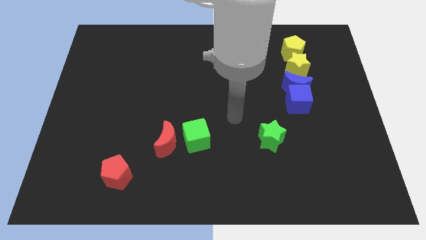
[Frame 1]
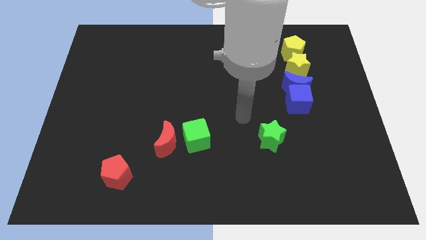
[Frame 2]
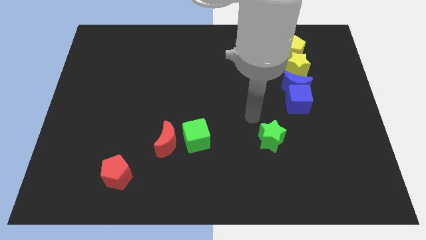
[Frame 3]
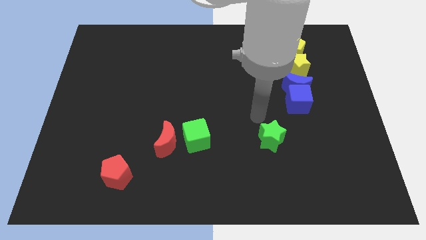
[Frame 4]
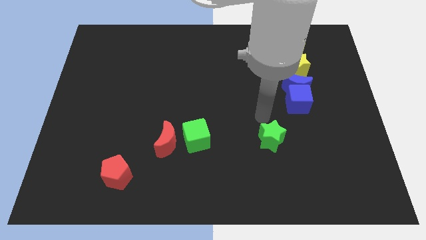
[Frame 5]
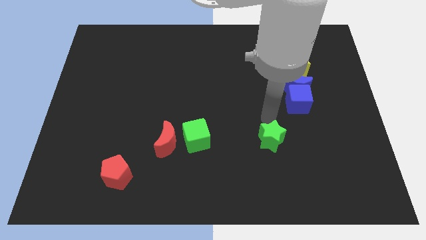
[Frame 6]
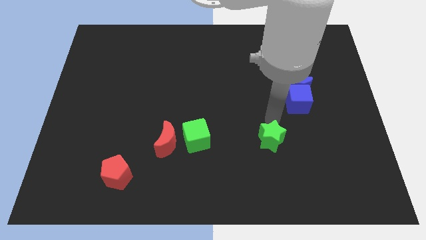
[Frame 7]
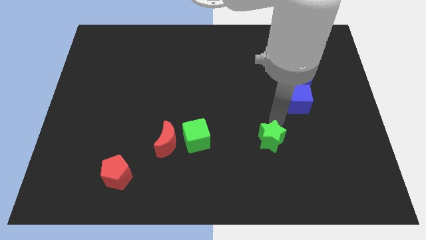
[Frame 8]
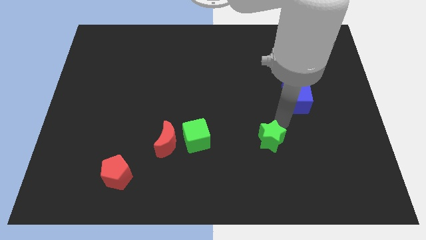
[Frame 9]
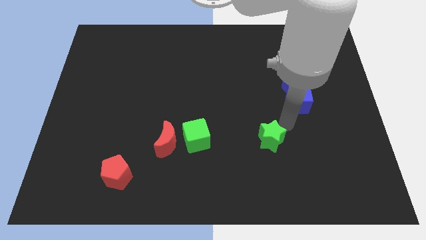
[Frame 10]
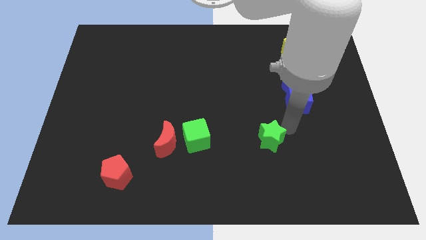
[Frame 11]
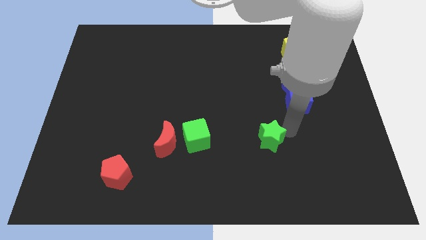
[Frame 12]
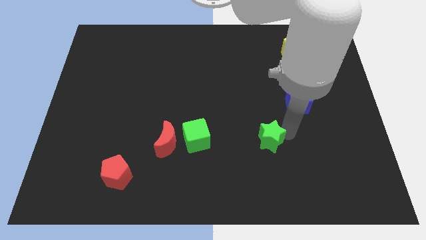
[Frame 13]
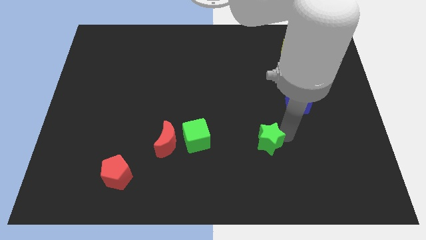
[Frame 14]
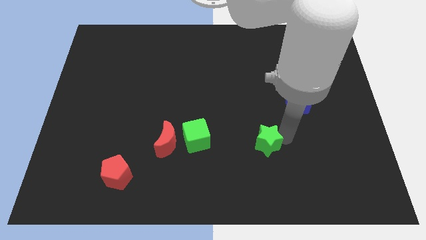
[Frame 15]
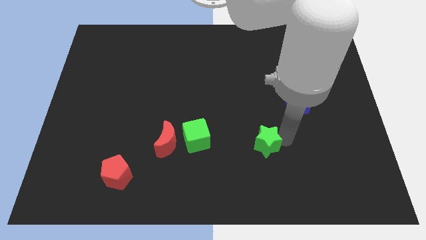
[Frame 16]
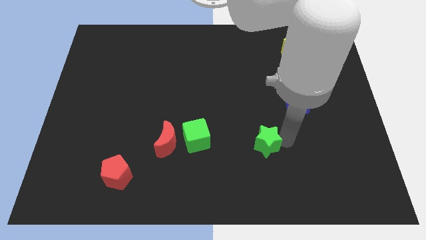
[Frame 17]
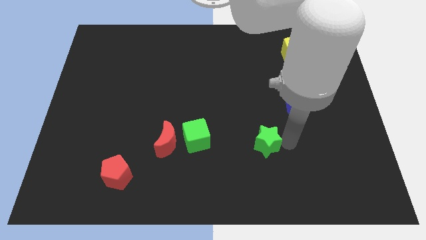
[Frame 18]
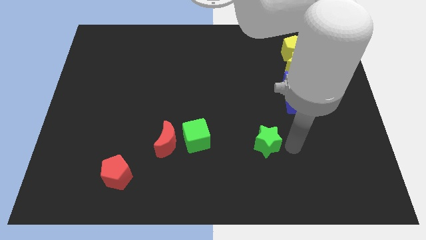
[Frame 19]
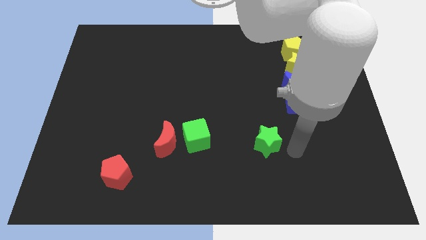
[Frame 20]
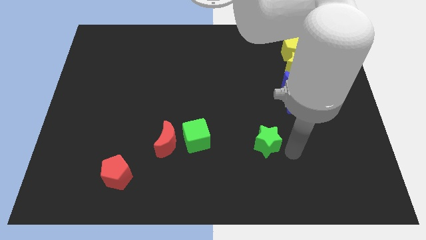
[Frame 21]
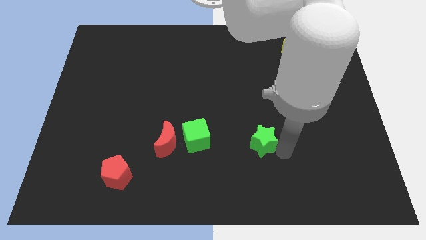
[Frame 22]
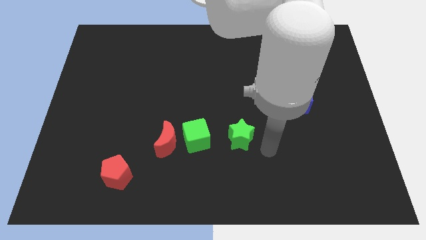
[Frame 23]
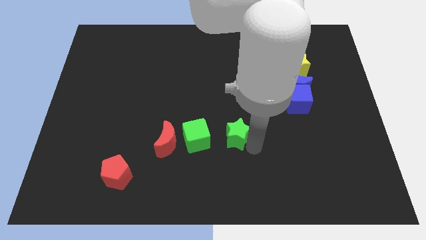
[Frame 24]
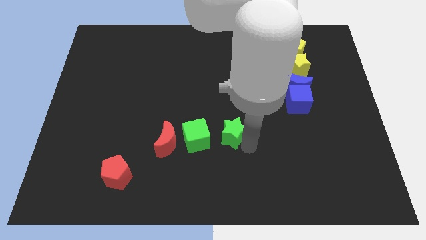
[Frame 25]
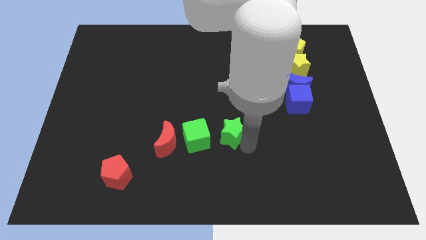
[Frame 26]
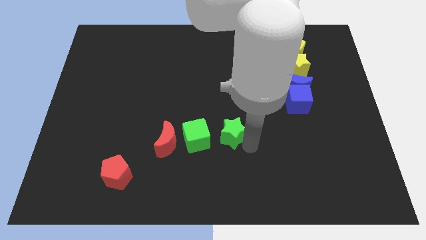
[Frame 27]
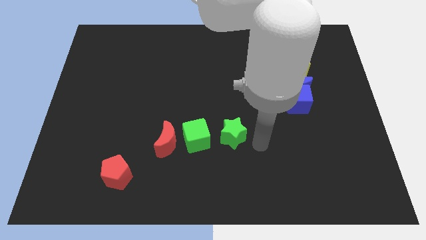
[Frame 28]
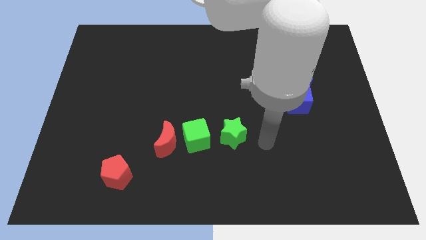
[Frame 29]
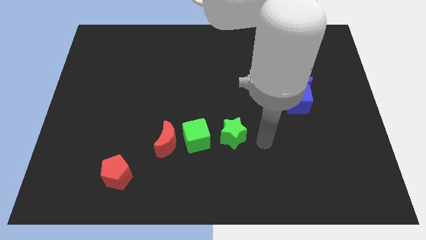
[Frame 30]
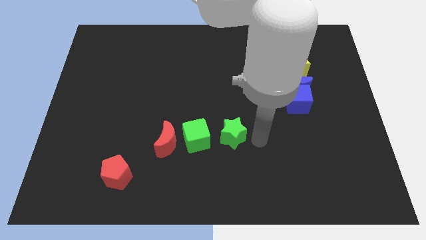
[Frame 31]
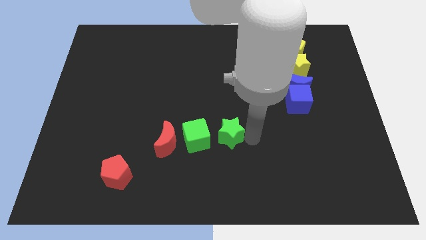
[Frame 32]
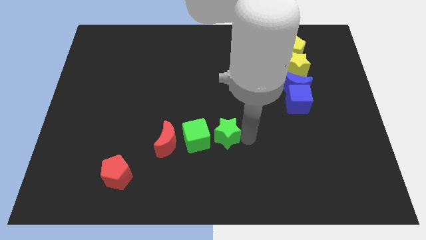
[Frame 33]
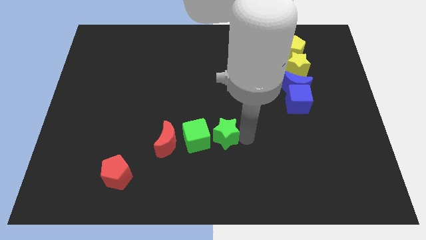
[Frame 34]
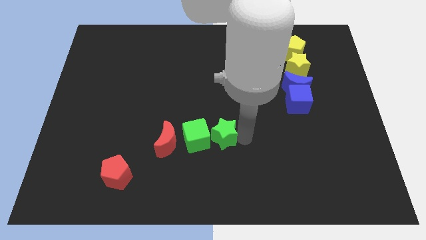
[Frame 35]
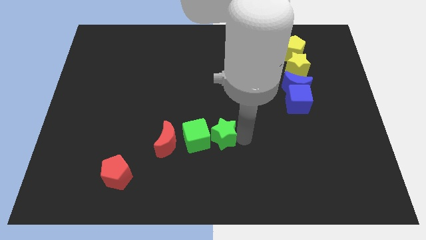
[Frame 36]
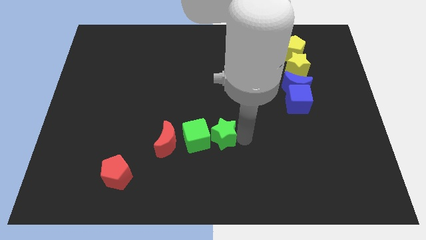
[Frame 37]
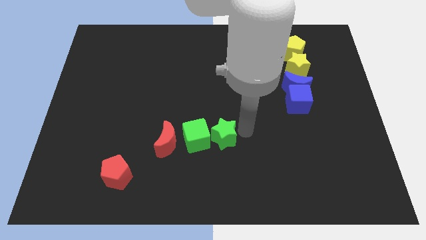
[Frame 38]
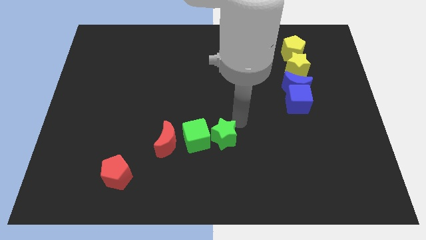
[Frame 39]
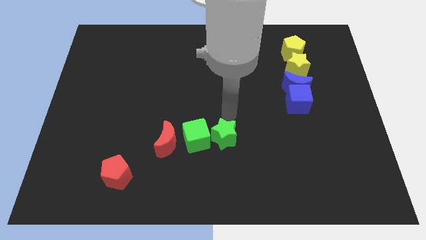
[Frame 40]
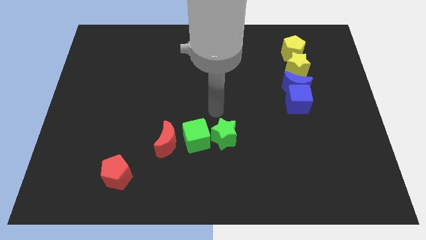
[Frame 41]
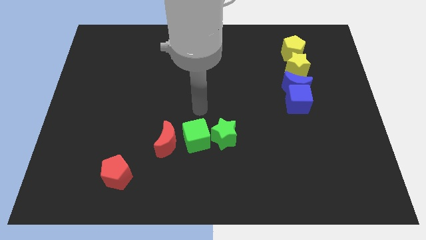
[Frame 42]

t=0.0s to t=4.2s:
push the green star close to the green cube

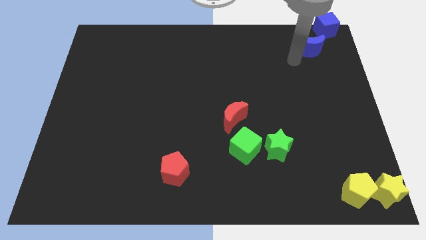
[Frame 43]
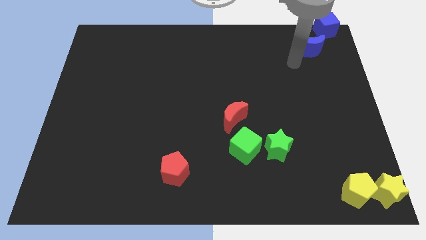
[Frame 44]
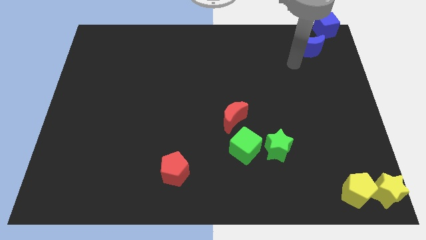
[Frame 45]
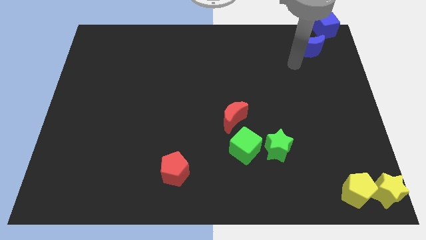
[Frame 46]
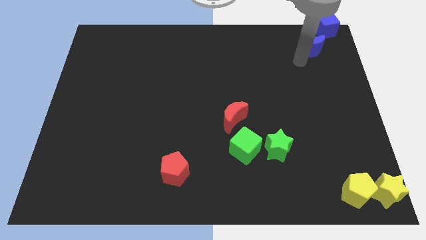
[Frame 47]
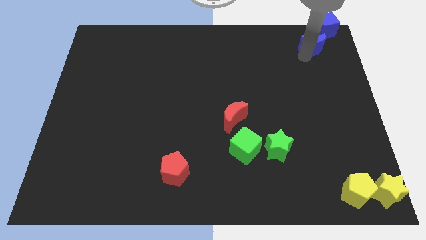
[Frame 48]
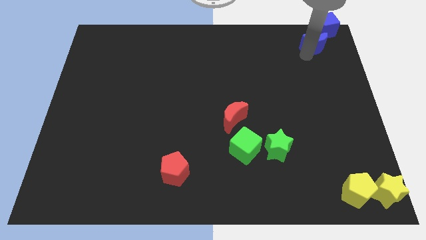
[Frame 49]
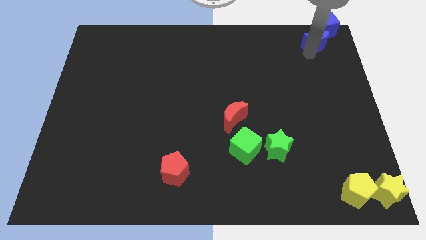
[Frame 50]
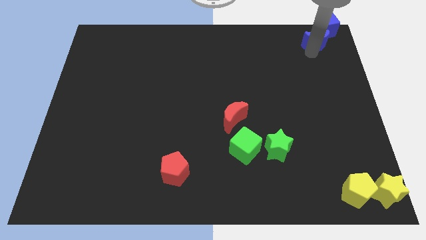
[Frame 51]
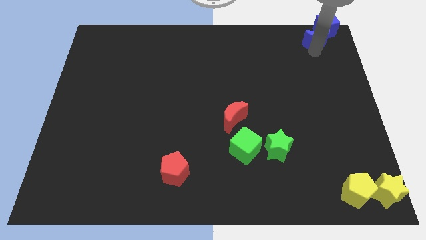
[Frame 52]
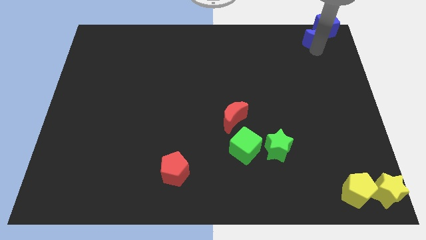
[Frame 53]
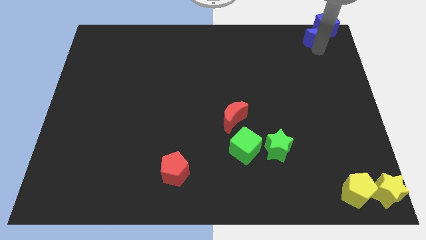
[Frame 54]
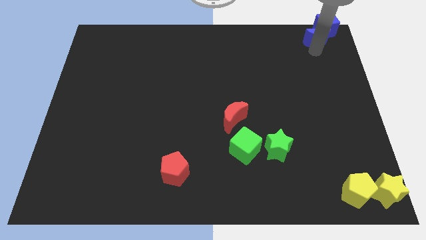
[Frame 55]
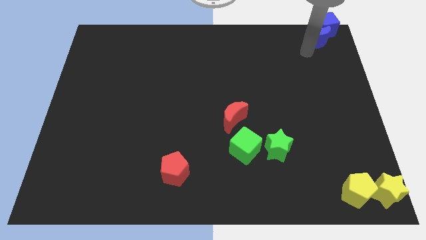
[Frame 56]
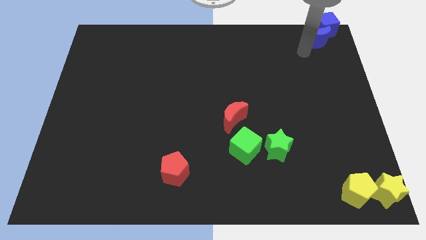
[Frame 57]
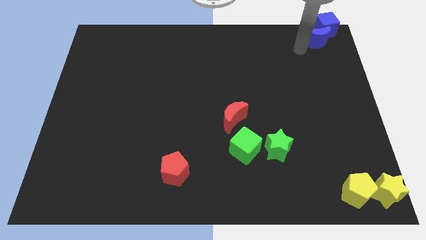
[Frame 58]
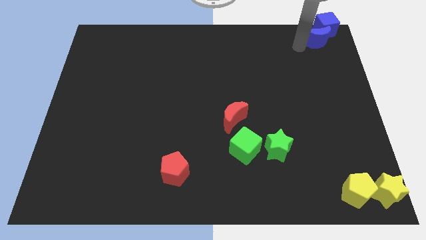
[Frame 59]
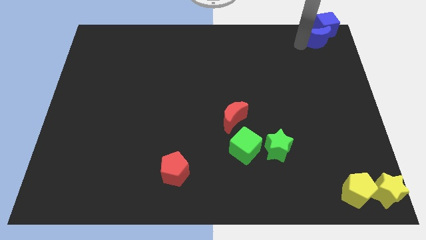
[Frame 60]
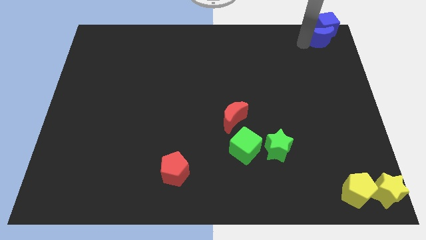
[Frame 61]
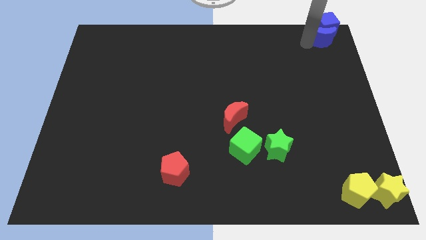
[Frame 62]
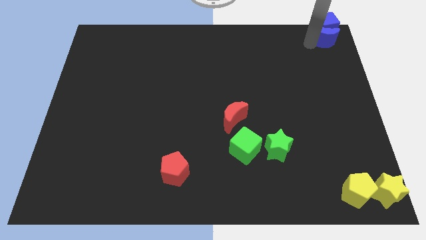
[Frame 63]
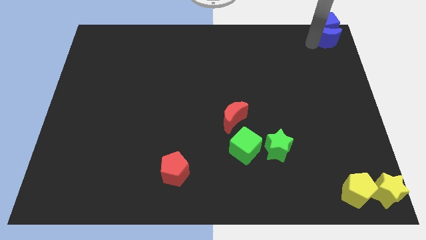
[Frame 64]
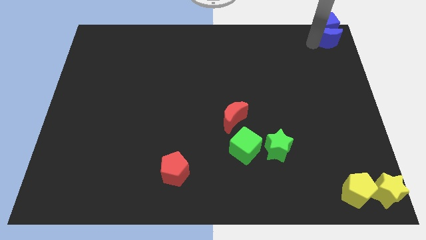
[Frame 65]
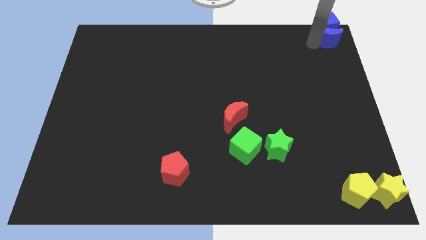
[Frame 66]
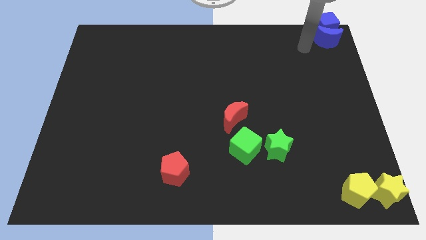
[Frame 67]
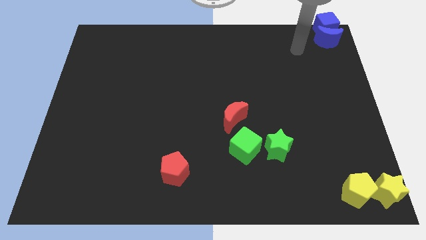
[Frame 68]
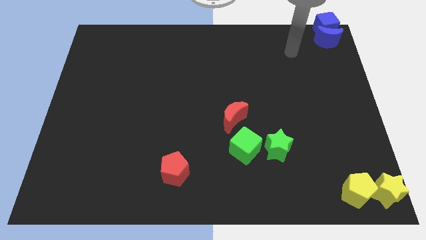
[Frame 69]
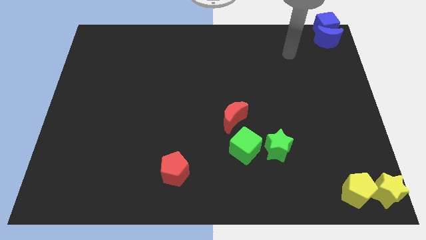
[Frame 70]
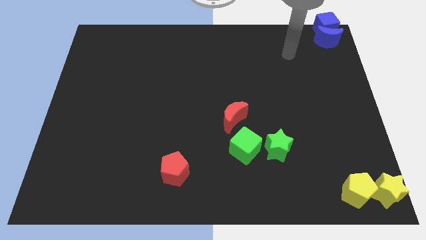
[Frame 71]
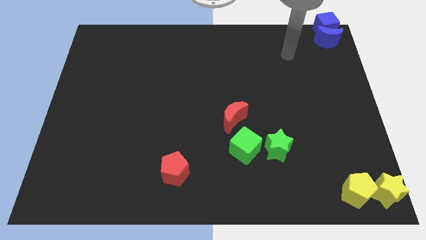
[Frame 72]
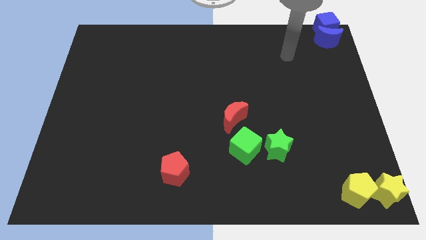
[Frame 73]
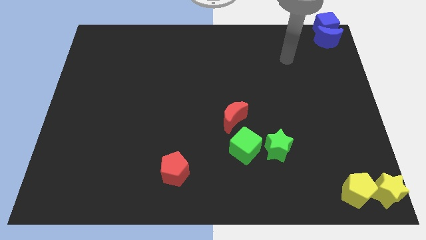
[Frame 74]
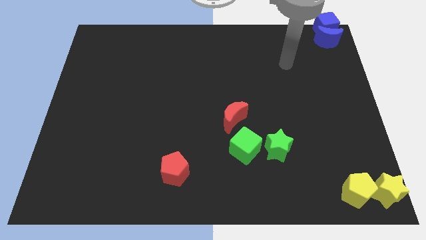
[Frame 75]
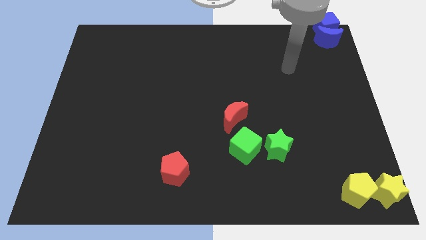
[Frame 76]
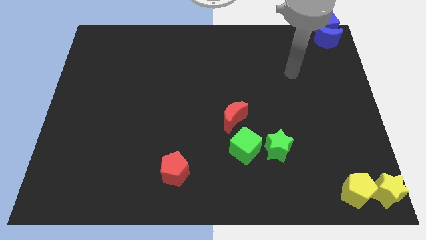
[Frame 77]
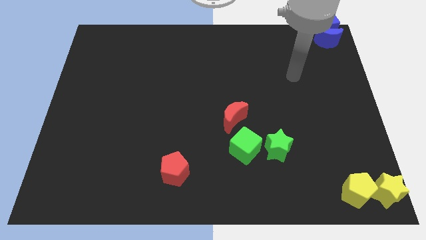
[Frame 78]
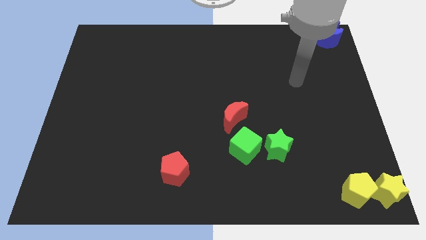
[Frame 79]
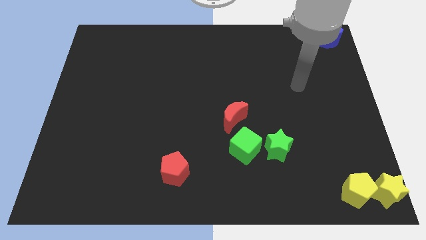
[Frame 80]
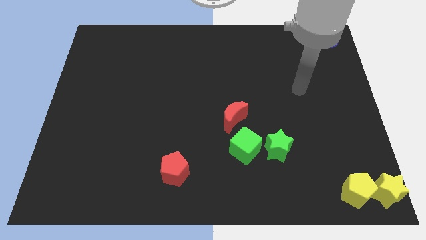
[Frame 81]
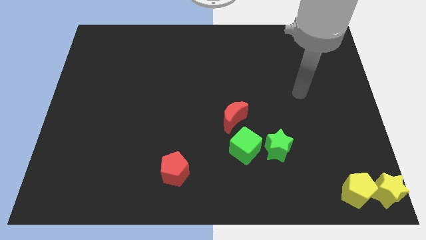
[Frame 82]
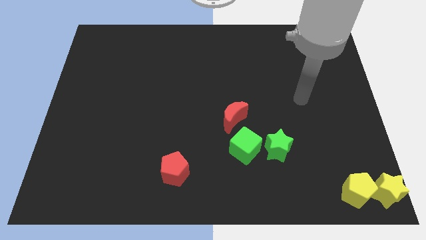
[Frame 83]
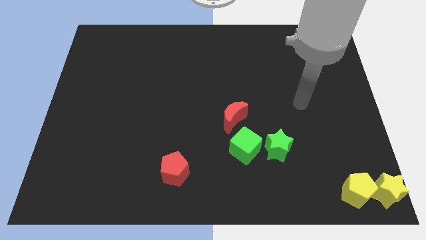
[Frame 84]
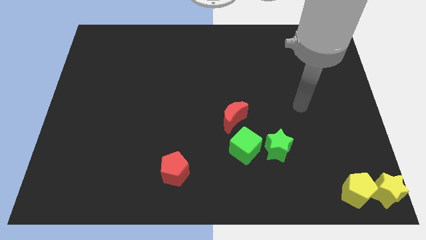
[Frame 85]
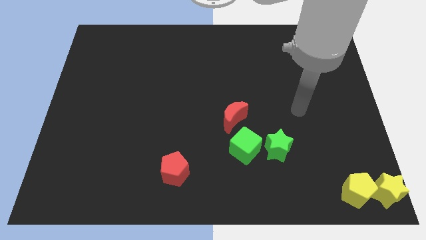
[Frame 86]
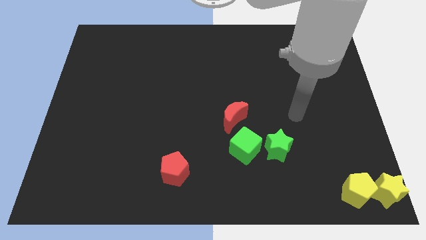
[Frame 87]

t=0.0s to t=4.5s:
push the blue crescent at the bottom of the blue cube
